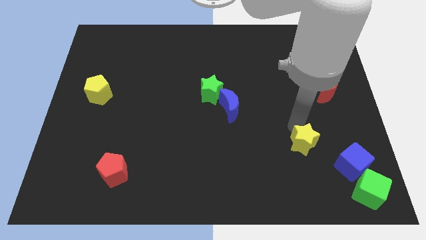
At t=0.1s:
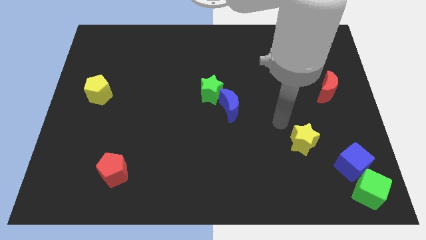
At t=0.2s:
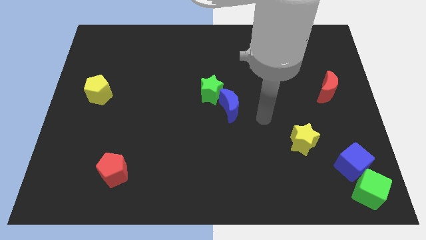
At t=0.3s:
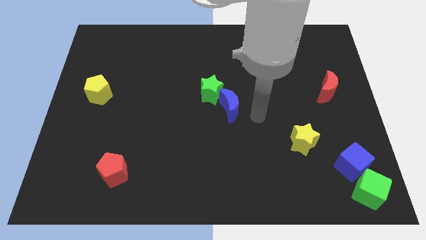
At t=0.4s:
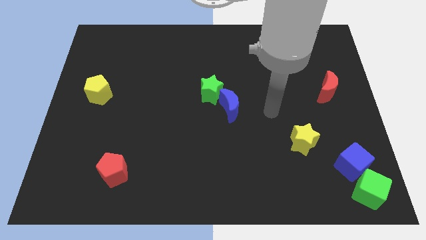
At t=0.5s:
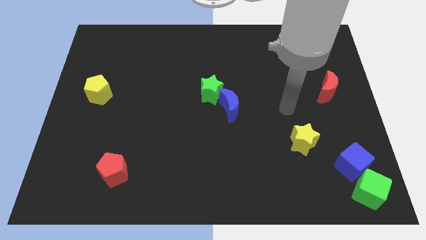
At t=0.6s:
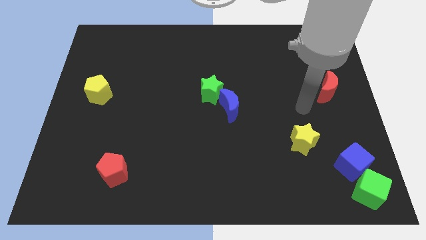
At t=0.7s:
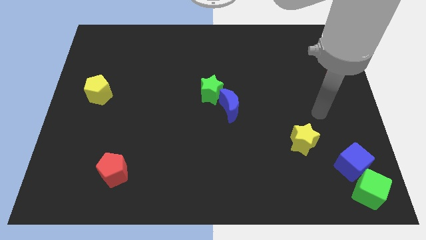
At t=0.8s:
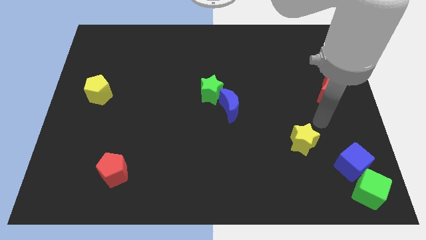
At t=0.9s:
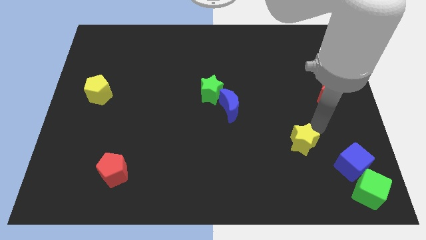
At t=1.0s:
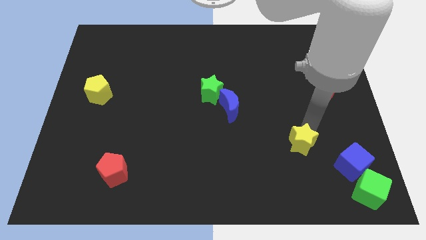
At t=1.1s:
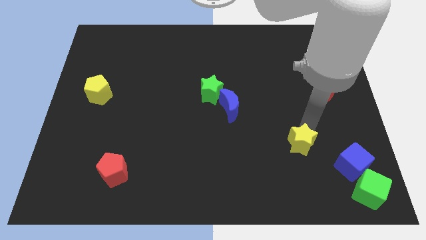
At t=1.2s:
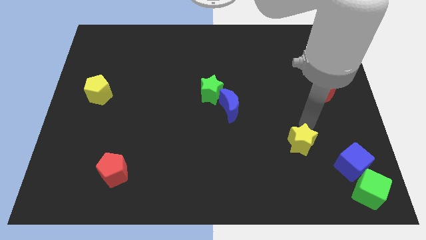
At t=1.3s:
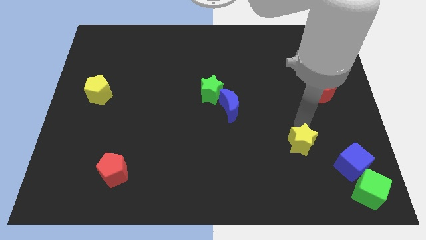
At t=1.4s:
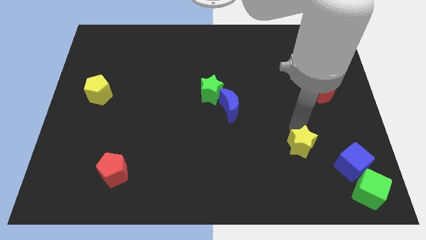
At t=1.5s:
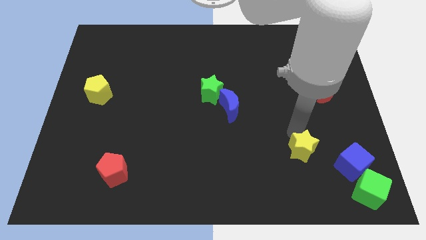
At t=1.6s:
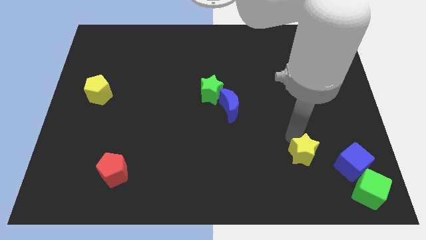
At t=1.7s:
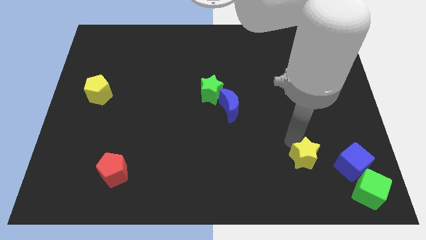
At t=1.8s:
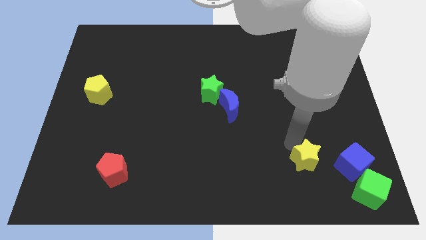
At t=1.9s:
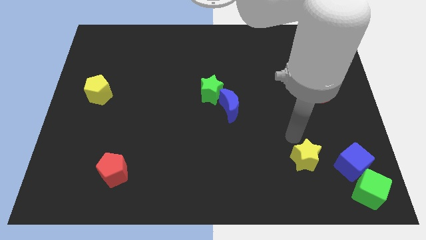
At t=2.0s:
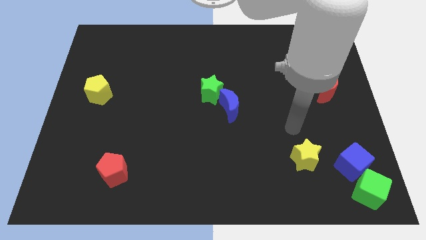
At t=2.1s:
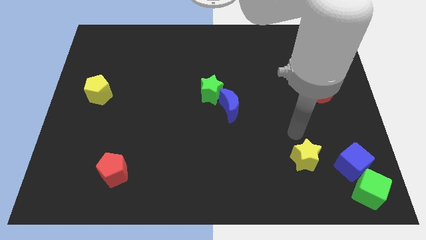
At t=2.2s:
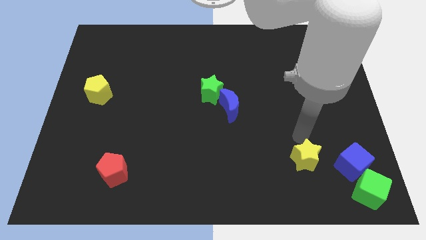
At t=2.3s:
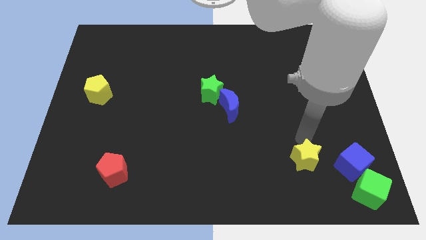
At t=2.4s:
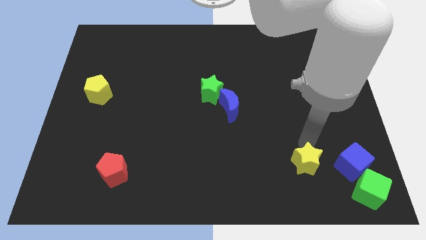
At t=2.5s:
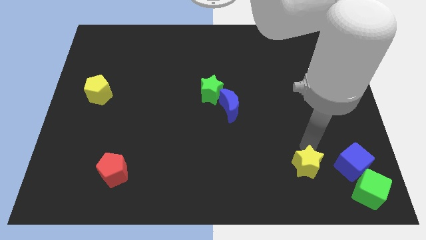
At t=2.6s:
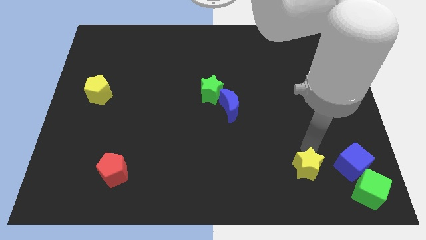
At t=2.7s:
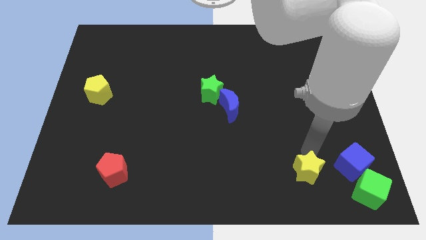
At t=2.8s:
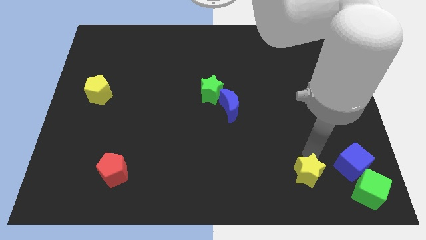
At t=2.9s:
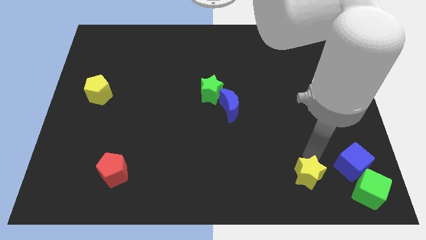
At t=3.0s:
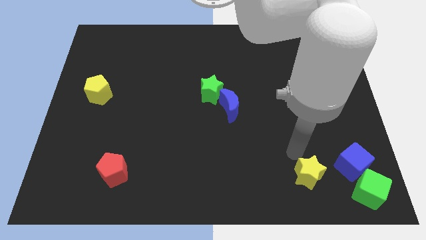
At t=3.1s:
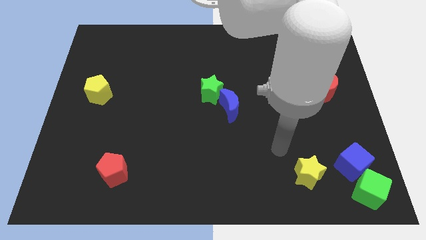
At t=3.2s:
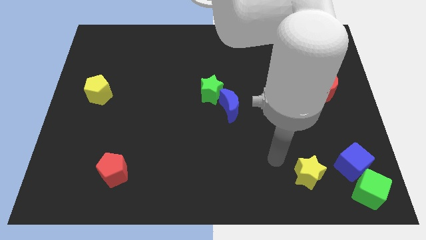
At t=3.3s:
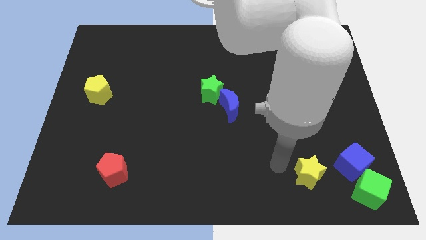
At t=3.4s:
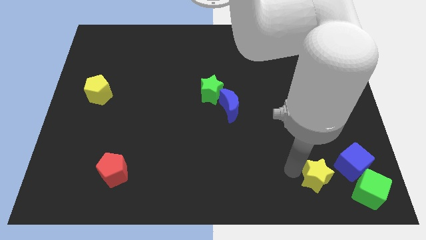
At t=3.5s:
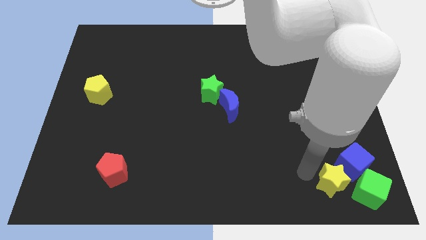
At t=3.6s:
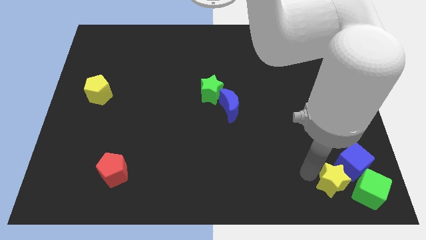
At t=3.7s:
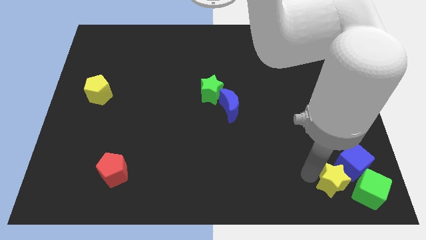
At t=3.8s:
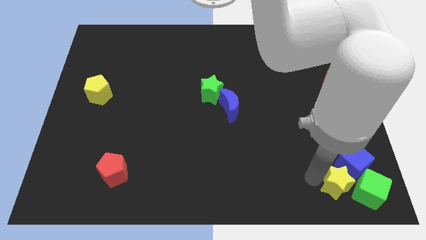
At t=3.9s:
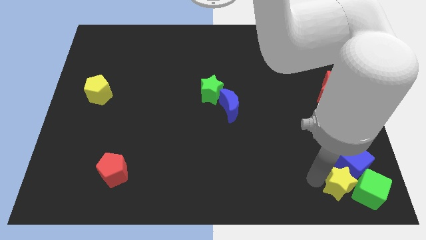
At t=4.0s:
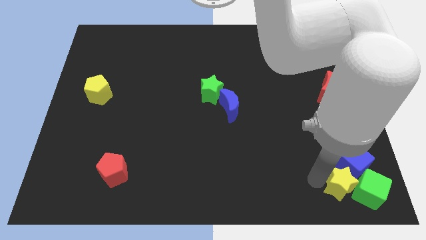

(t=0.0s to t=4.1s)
move yellow star to left of green cube

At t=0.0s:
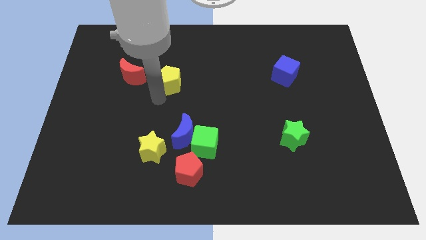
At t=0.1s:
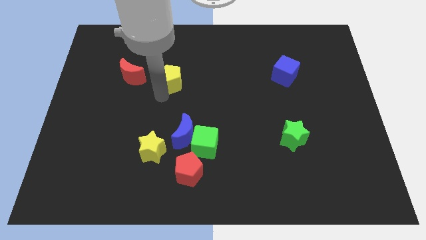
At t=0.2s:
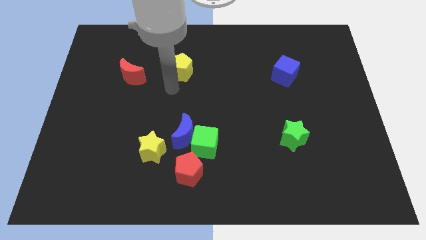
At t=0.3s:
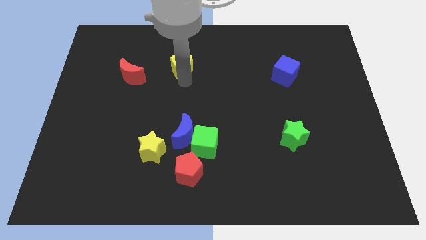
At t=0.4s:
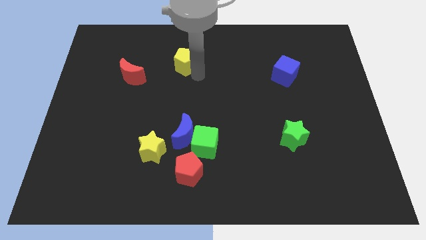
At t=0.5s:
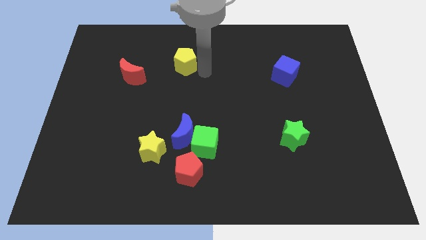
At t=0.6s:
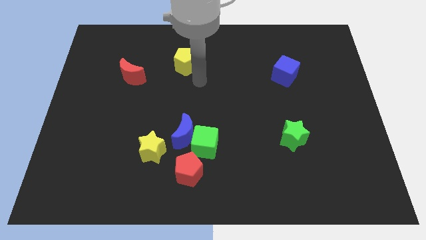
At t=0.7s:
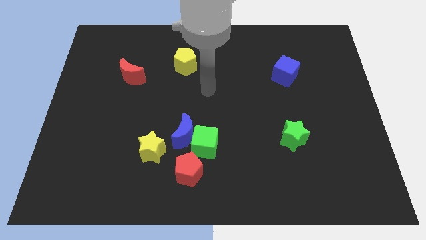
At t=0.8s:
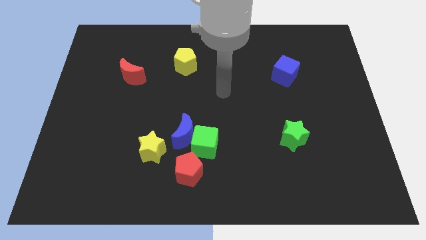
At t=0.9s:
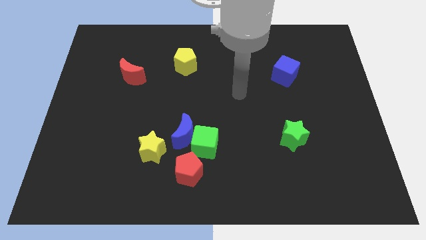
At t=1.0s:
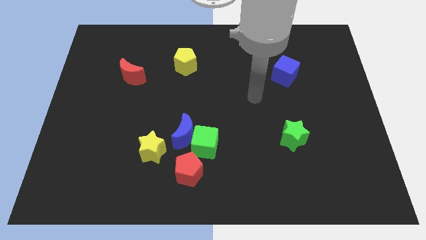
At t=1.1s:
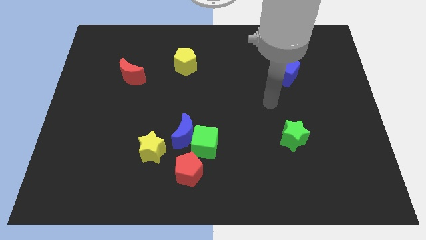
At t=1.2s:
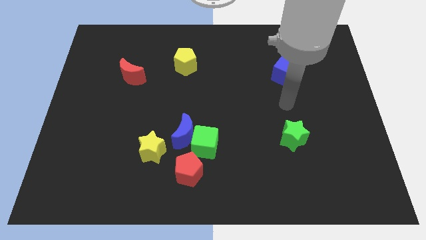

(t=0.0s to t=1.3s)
move the yellow pentagon horizontally to the left side blue cube

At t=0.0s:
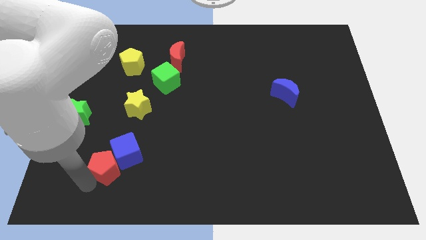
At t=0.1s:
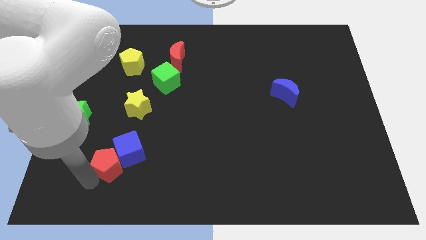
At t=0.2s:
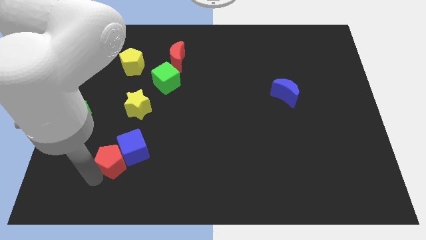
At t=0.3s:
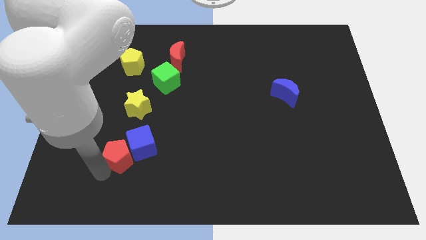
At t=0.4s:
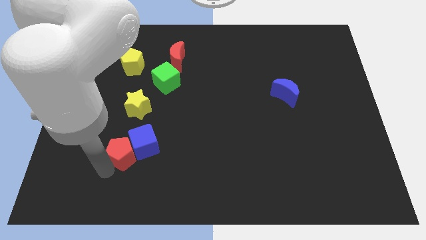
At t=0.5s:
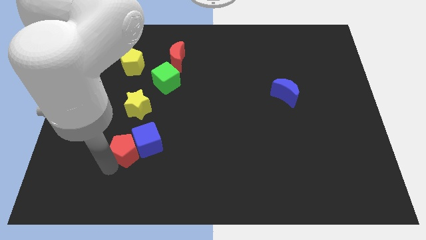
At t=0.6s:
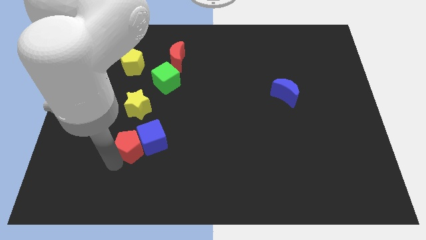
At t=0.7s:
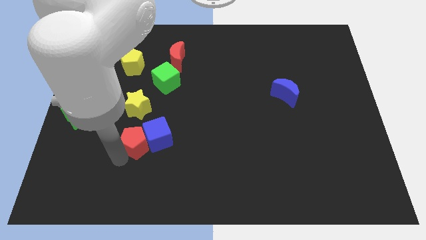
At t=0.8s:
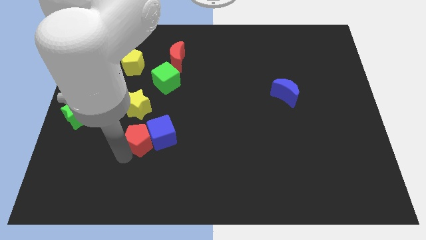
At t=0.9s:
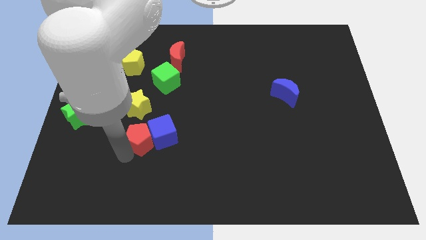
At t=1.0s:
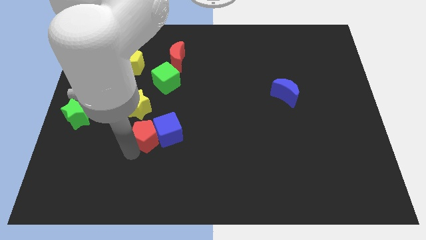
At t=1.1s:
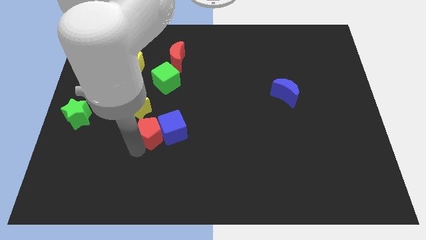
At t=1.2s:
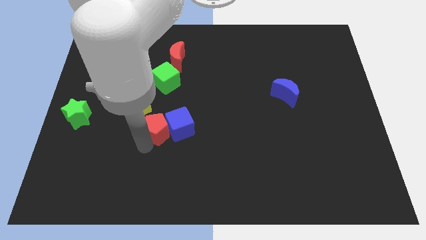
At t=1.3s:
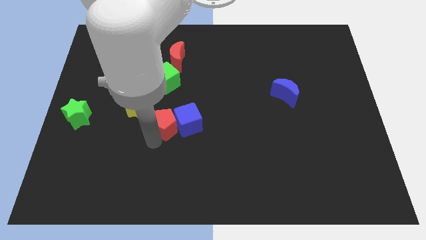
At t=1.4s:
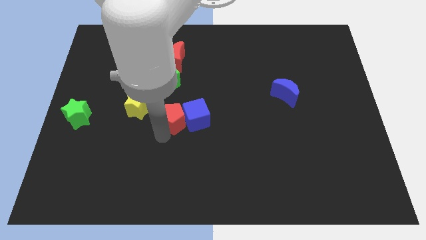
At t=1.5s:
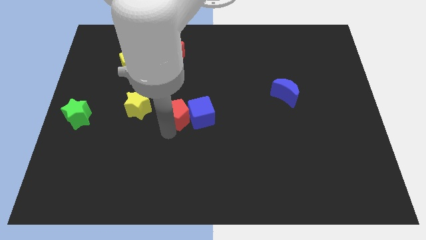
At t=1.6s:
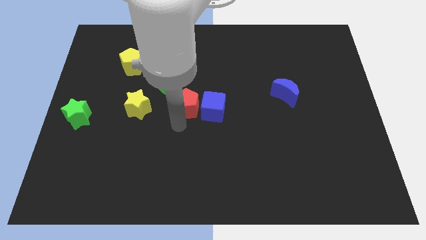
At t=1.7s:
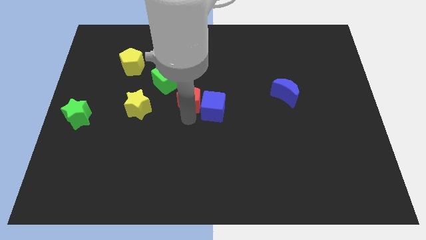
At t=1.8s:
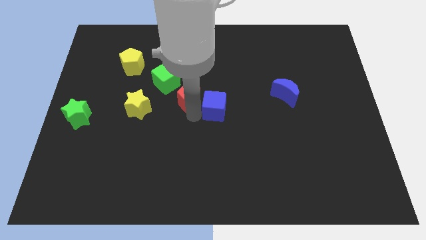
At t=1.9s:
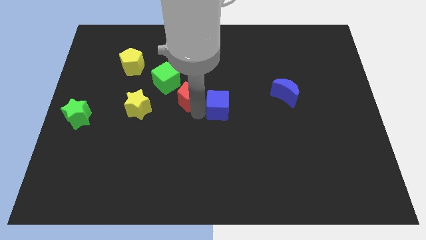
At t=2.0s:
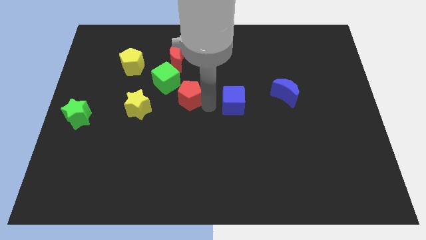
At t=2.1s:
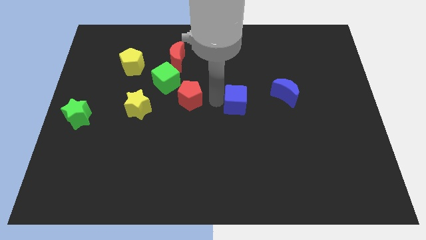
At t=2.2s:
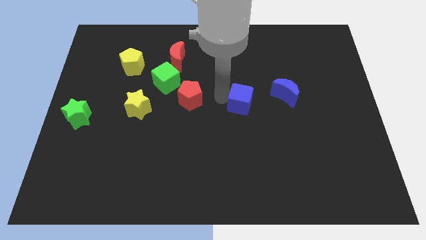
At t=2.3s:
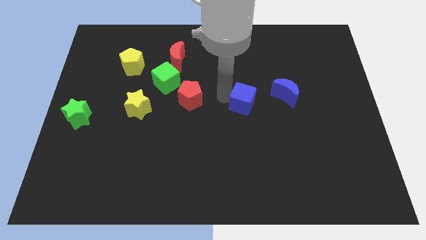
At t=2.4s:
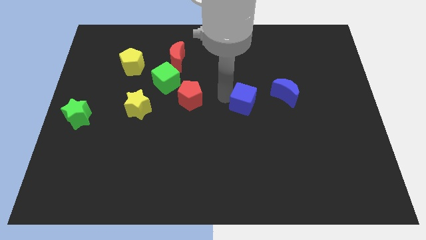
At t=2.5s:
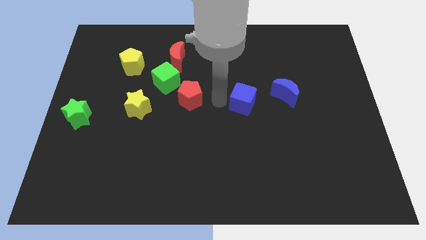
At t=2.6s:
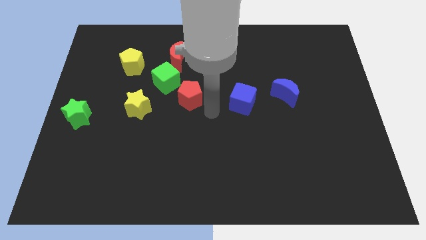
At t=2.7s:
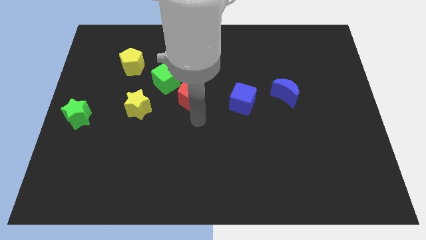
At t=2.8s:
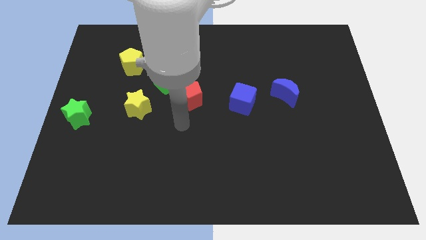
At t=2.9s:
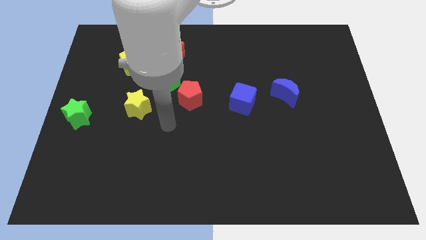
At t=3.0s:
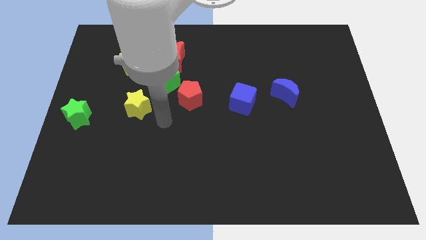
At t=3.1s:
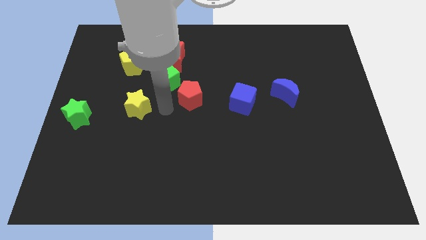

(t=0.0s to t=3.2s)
separate the red pentagon and blue cube

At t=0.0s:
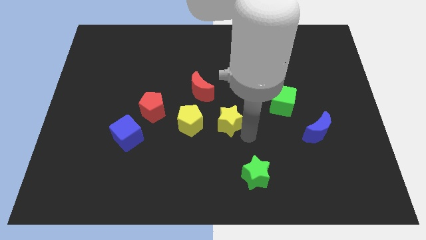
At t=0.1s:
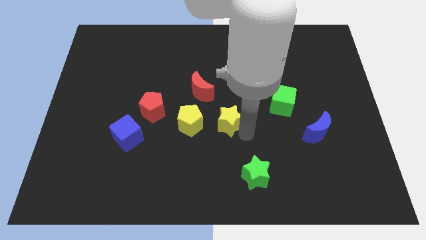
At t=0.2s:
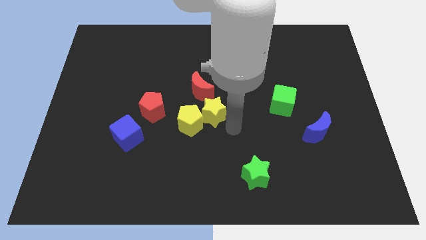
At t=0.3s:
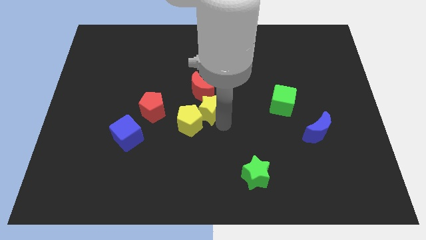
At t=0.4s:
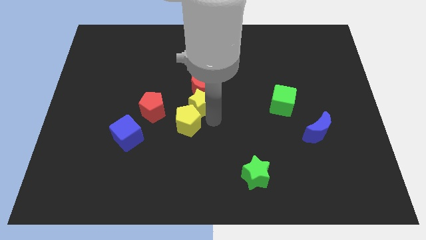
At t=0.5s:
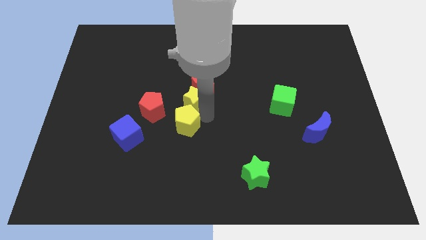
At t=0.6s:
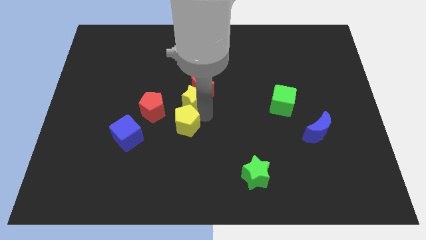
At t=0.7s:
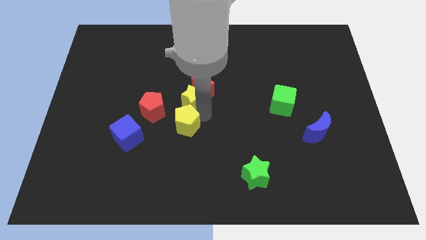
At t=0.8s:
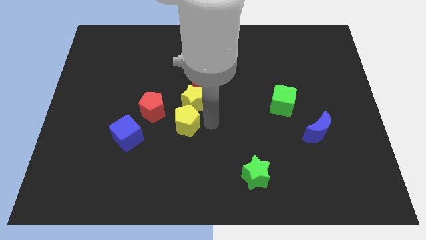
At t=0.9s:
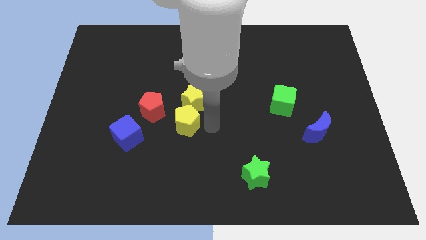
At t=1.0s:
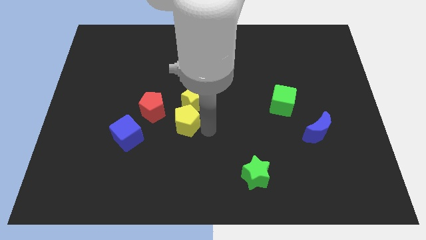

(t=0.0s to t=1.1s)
push yellow star to the top of the yellow pentagon
